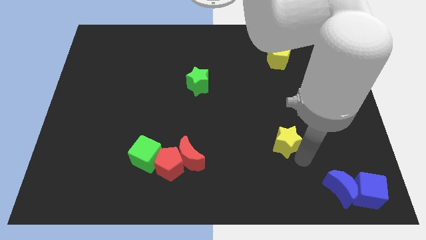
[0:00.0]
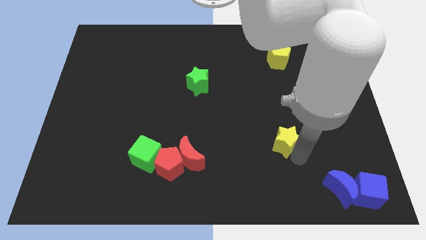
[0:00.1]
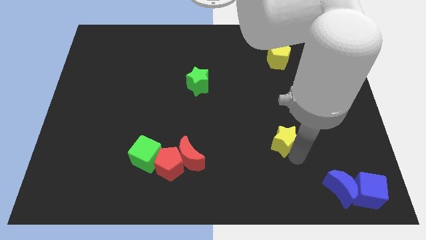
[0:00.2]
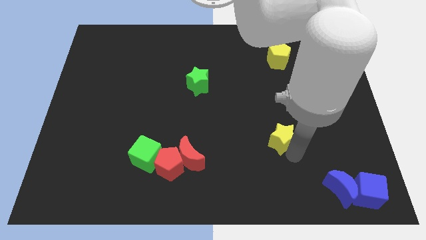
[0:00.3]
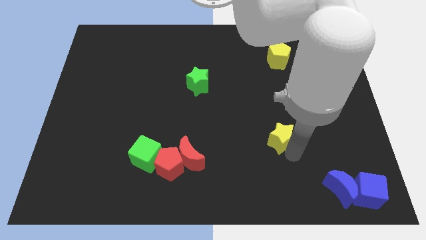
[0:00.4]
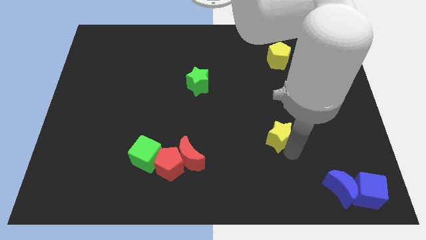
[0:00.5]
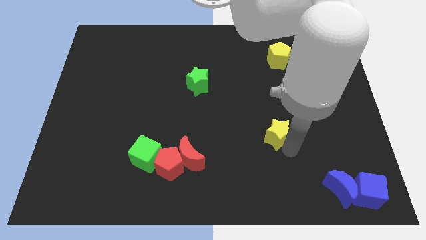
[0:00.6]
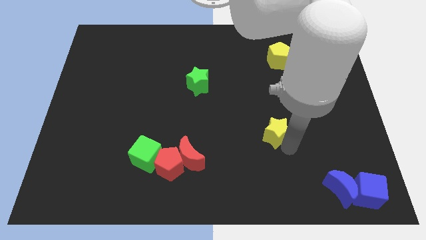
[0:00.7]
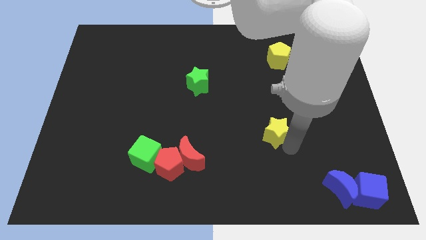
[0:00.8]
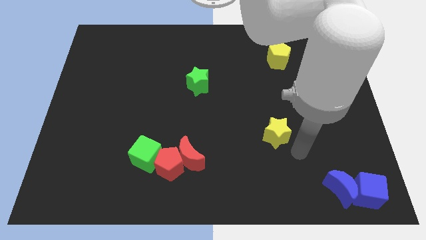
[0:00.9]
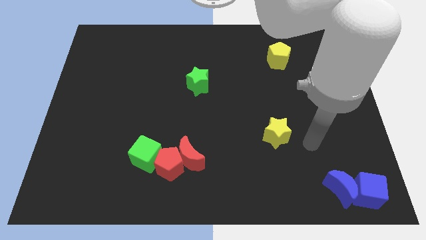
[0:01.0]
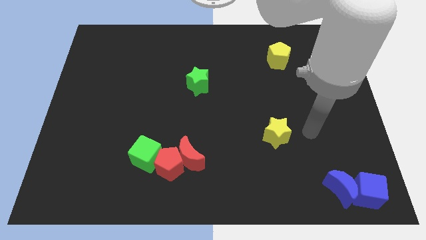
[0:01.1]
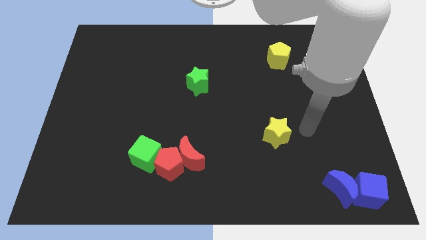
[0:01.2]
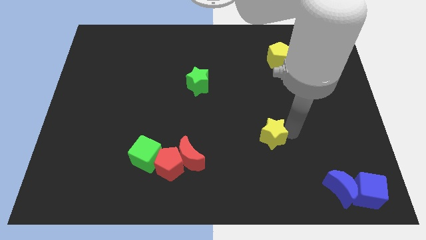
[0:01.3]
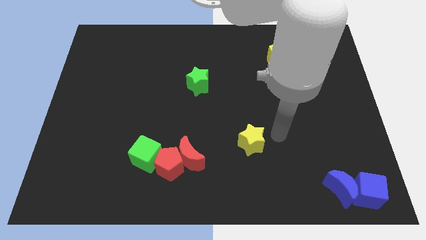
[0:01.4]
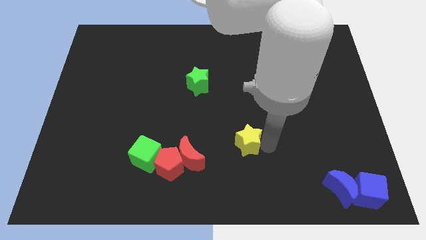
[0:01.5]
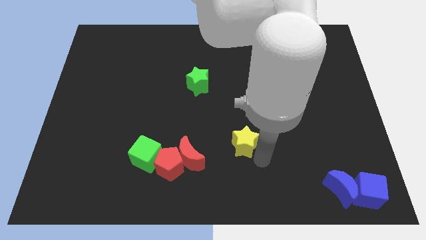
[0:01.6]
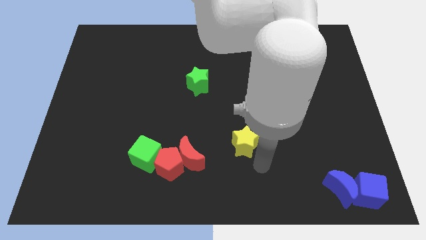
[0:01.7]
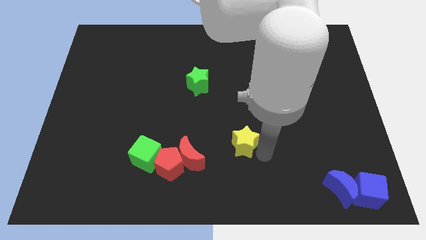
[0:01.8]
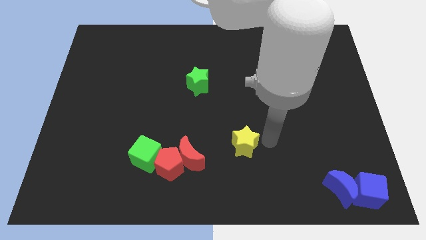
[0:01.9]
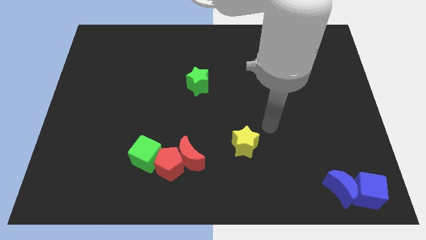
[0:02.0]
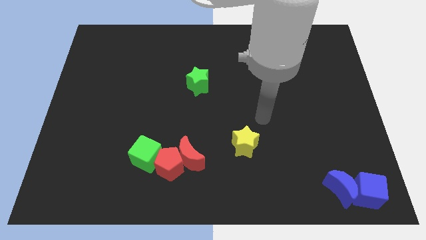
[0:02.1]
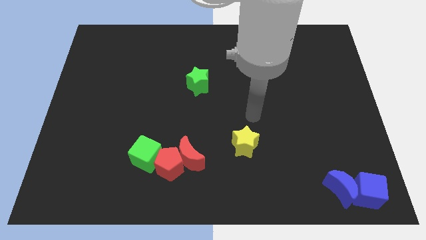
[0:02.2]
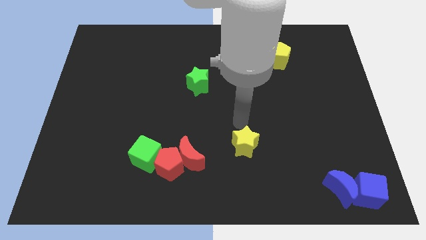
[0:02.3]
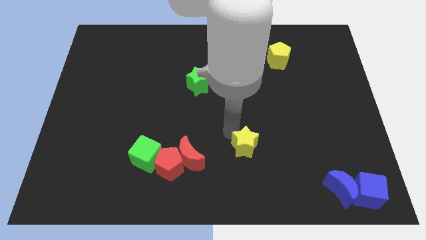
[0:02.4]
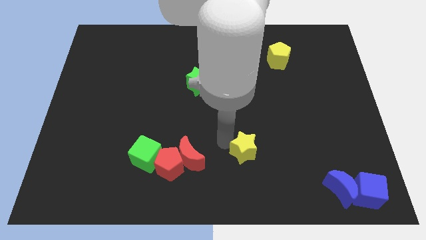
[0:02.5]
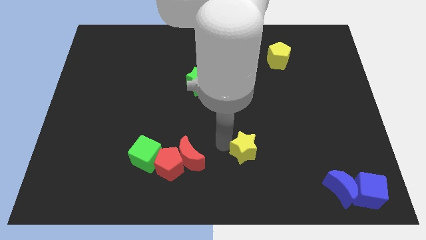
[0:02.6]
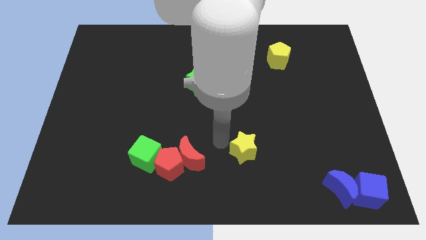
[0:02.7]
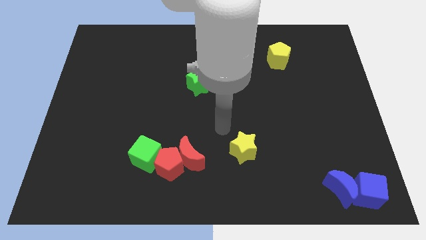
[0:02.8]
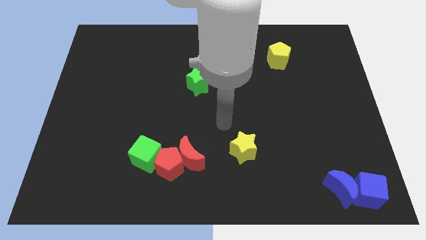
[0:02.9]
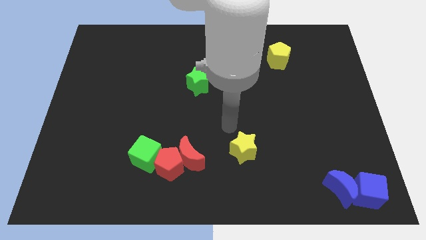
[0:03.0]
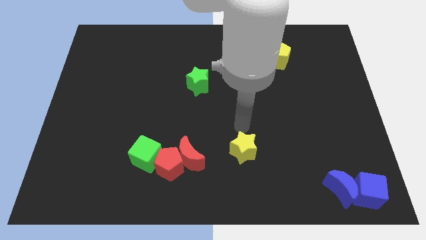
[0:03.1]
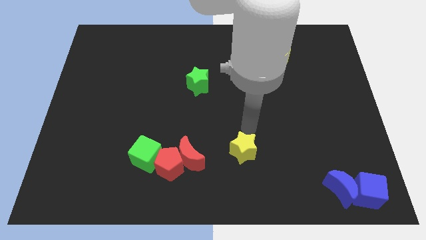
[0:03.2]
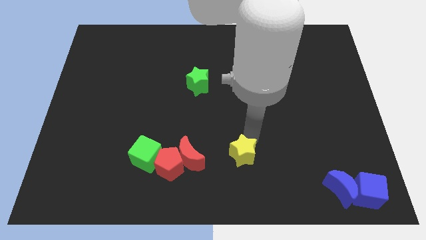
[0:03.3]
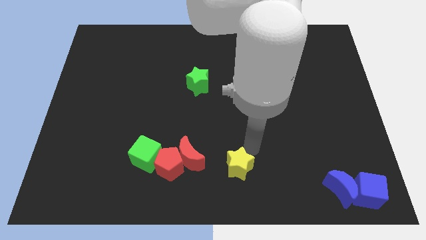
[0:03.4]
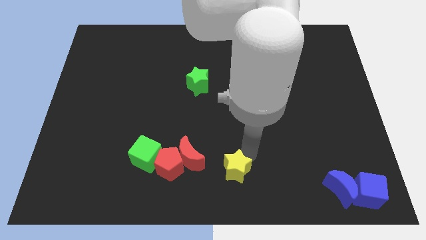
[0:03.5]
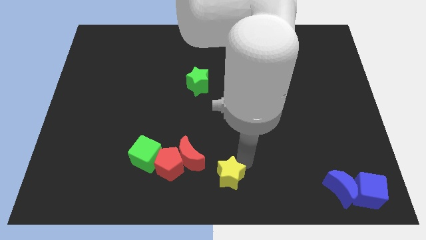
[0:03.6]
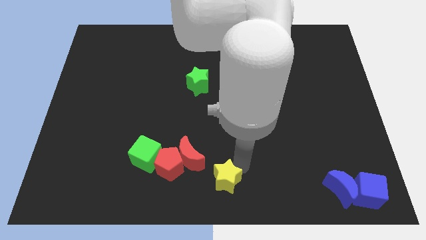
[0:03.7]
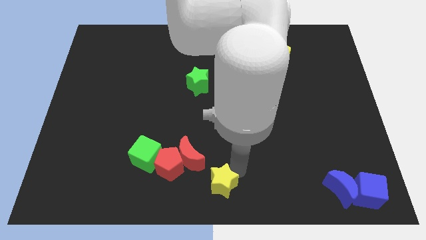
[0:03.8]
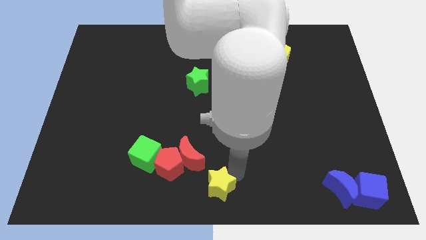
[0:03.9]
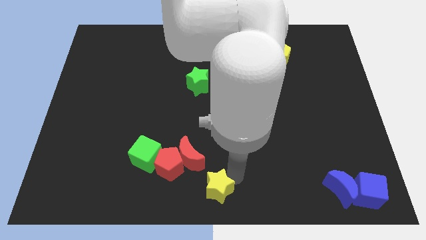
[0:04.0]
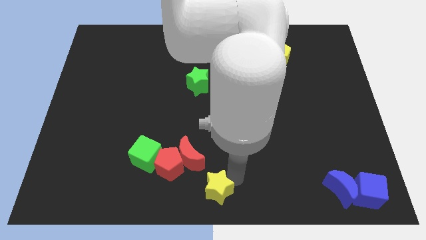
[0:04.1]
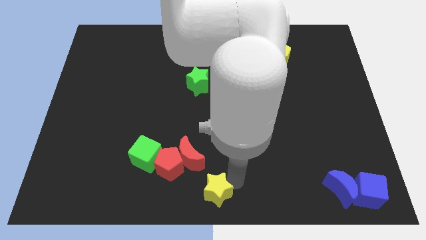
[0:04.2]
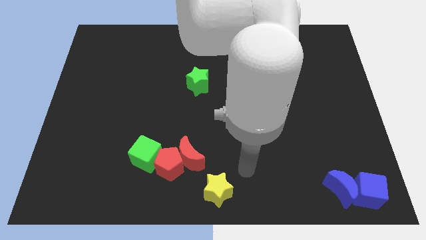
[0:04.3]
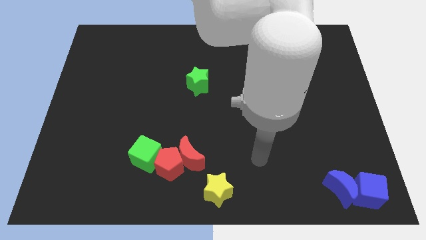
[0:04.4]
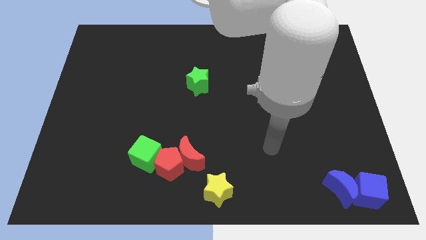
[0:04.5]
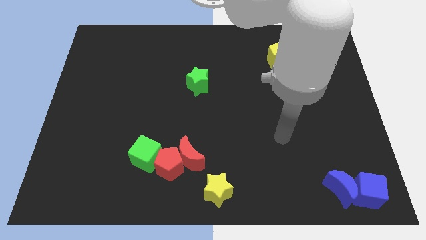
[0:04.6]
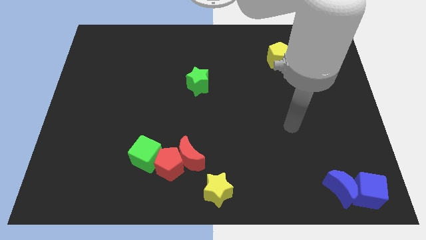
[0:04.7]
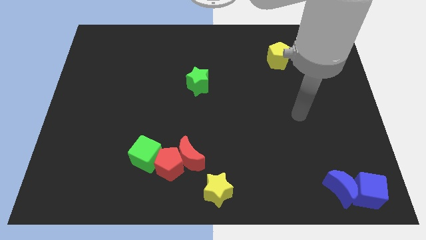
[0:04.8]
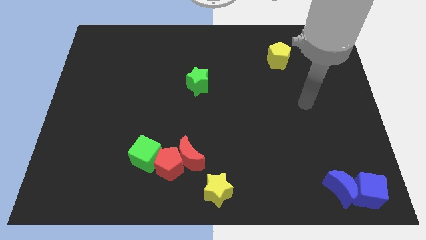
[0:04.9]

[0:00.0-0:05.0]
move the yellow star towards the bottom center side of the board

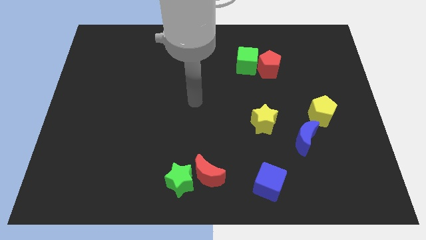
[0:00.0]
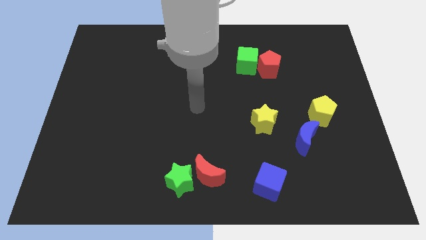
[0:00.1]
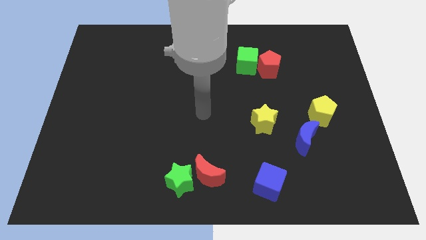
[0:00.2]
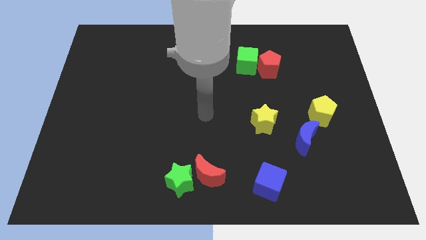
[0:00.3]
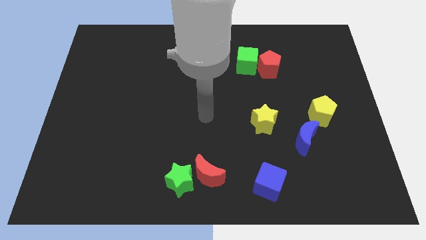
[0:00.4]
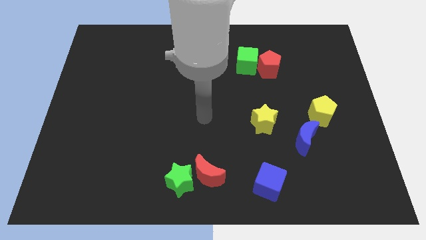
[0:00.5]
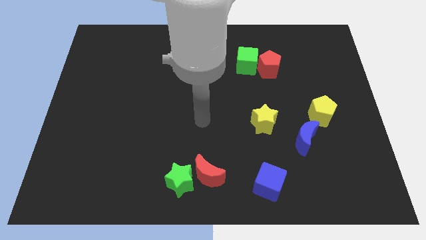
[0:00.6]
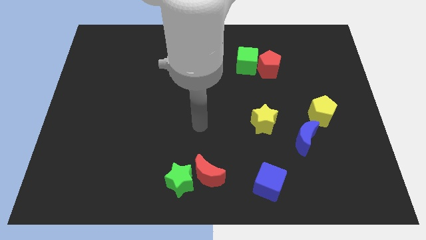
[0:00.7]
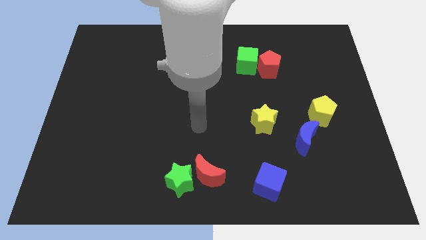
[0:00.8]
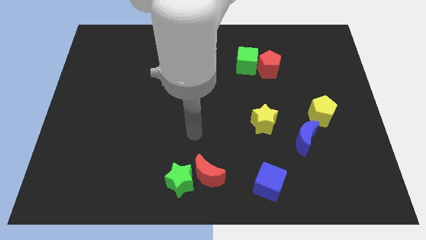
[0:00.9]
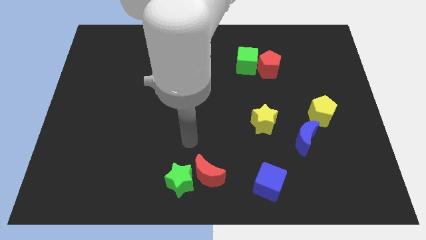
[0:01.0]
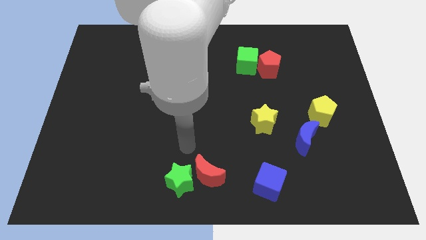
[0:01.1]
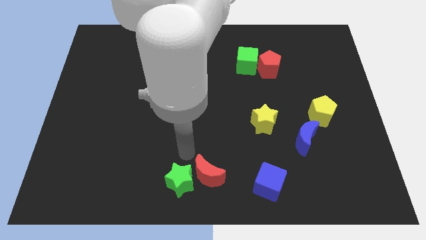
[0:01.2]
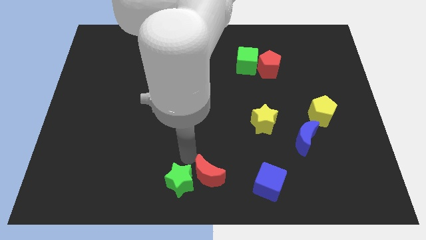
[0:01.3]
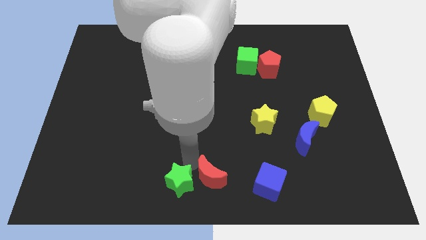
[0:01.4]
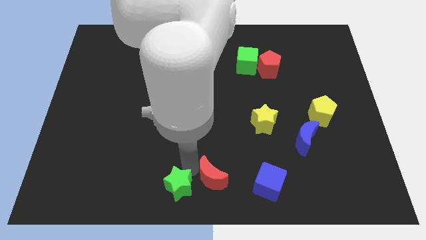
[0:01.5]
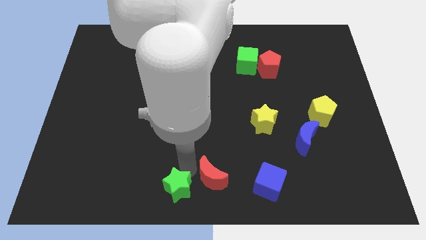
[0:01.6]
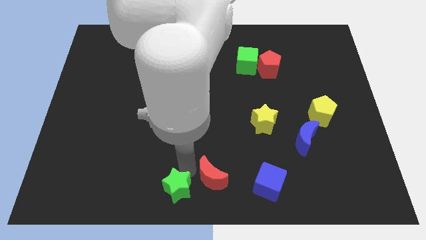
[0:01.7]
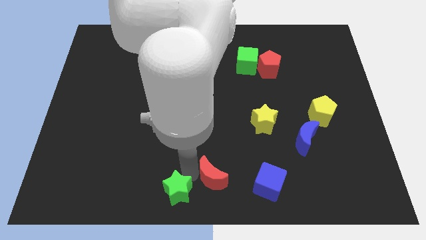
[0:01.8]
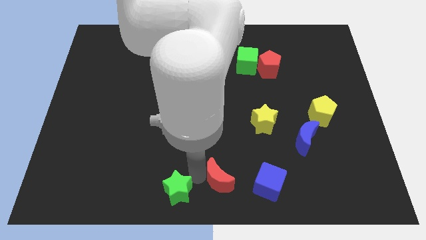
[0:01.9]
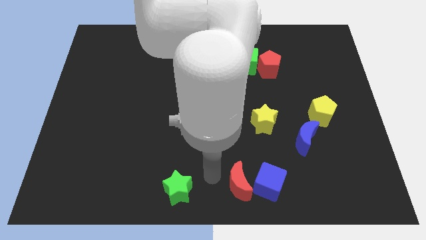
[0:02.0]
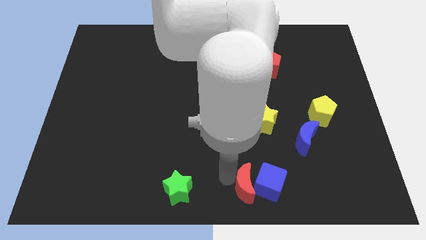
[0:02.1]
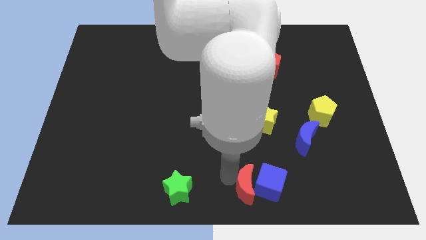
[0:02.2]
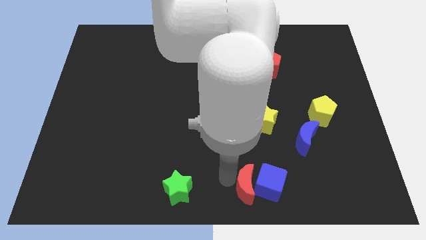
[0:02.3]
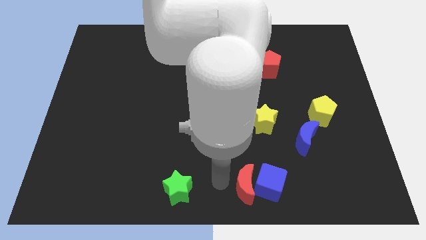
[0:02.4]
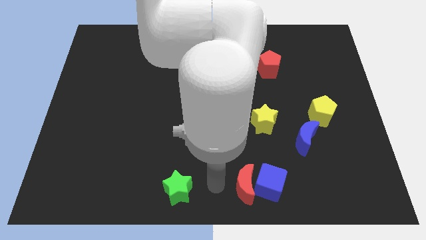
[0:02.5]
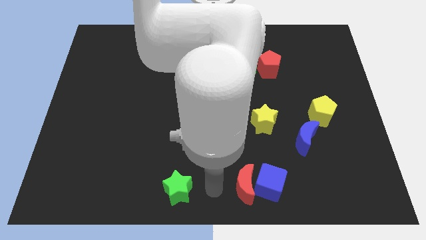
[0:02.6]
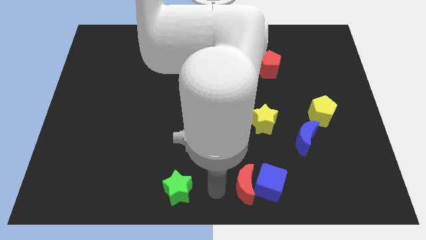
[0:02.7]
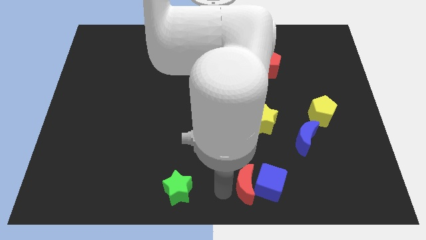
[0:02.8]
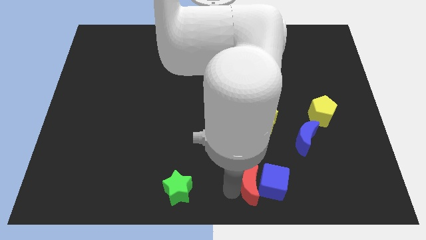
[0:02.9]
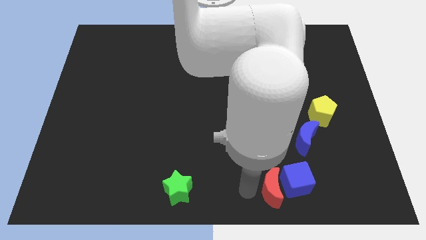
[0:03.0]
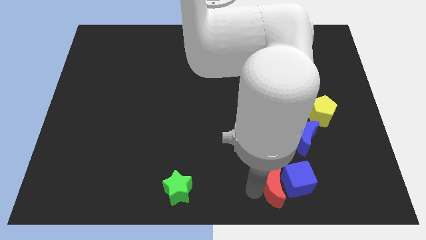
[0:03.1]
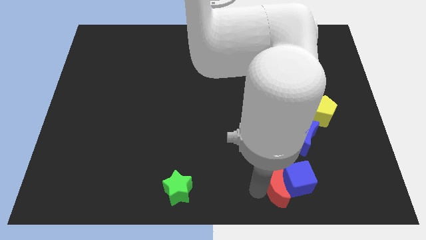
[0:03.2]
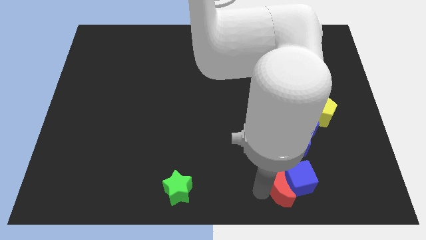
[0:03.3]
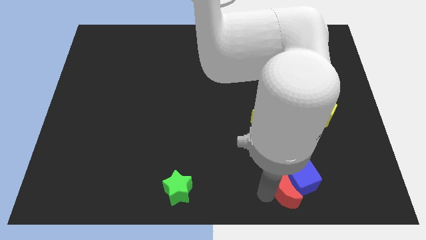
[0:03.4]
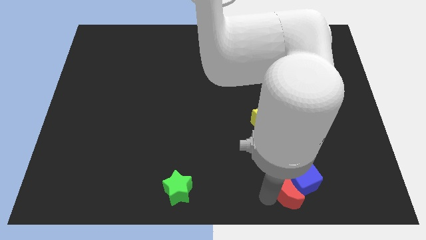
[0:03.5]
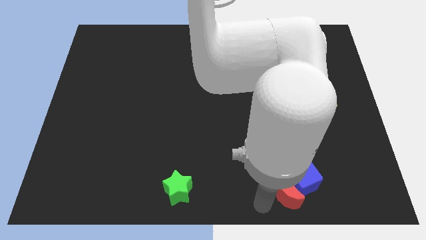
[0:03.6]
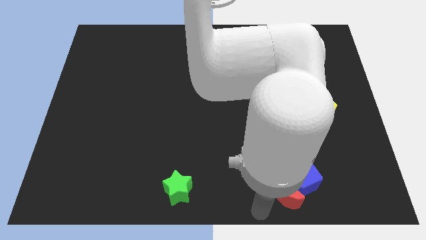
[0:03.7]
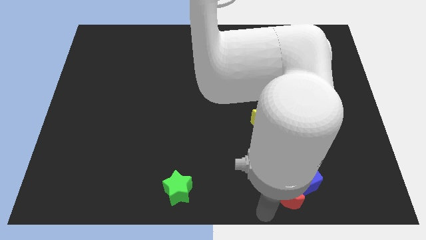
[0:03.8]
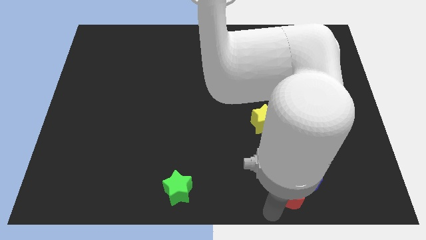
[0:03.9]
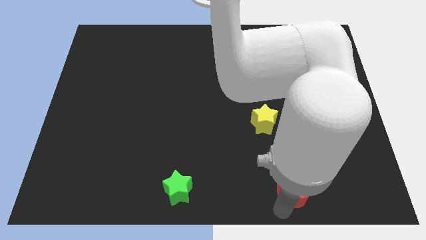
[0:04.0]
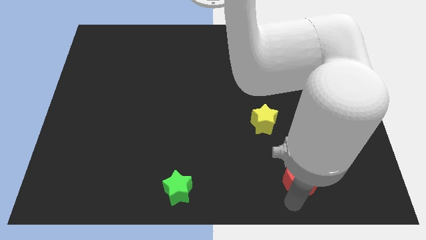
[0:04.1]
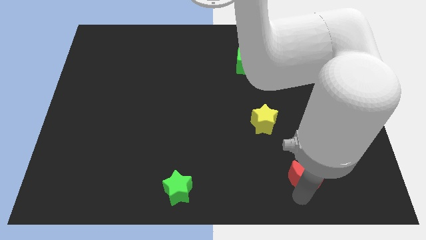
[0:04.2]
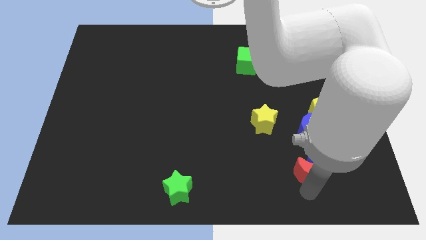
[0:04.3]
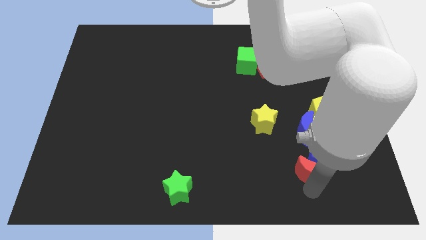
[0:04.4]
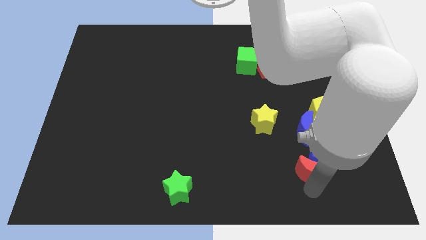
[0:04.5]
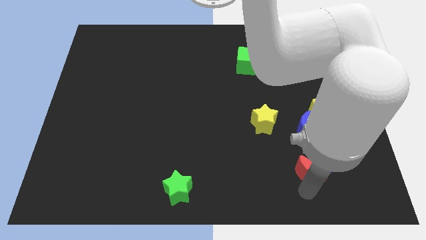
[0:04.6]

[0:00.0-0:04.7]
move the red crescent along with the blue cube into the blue crescent
